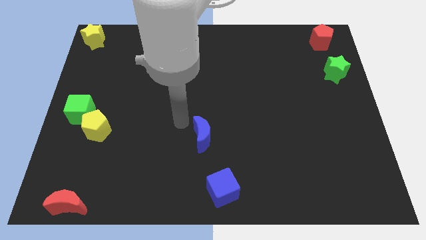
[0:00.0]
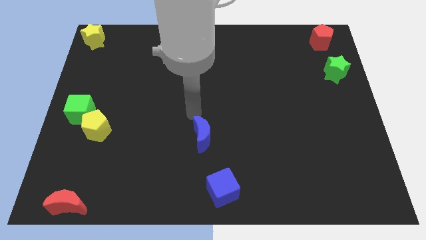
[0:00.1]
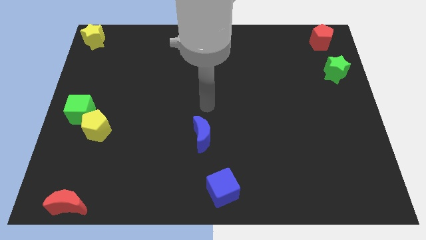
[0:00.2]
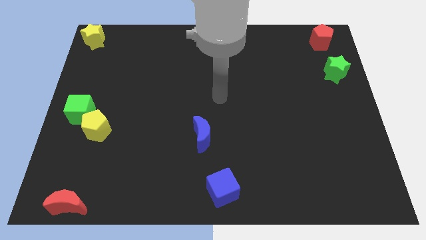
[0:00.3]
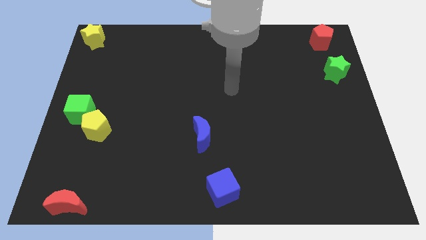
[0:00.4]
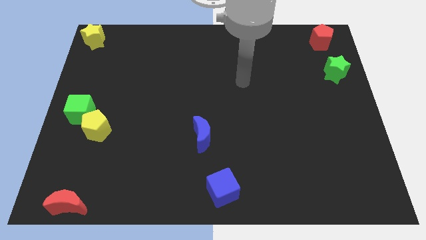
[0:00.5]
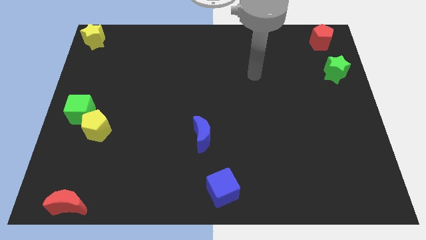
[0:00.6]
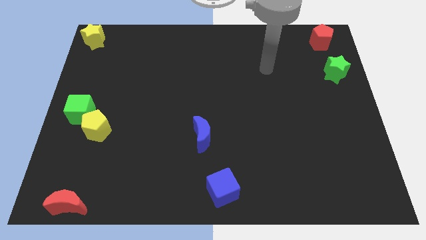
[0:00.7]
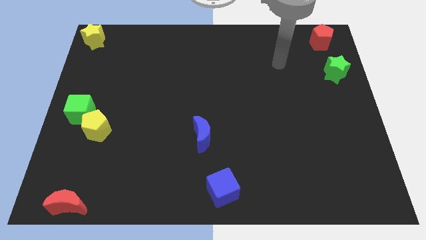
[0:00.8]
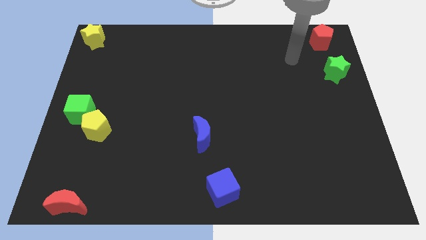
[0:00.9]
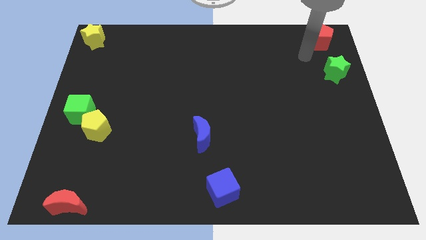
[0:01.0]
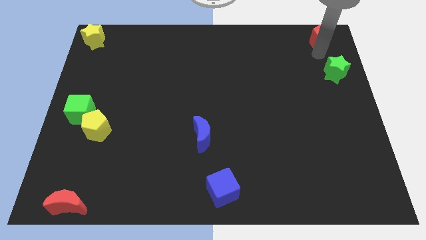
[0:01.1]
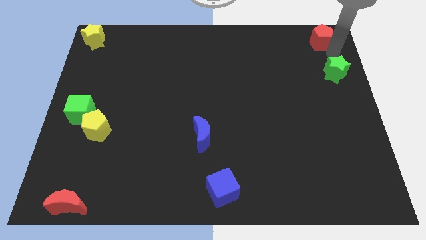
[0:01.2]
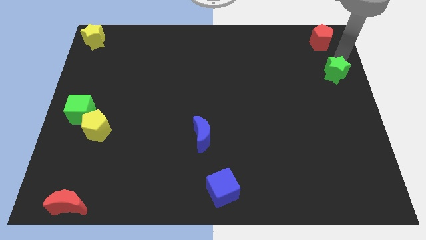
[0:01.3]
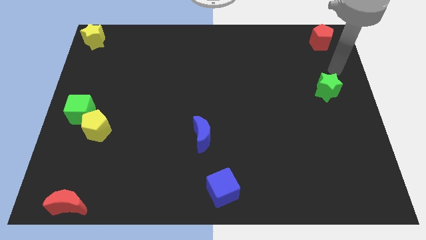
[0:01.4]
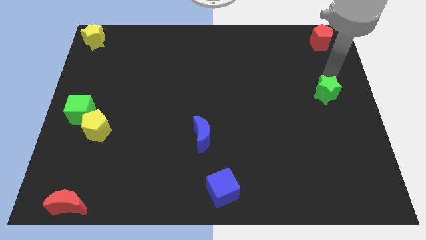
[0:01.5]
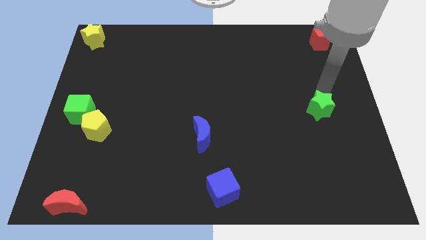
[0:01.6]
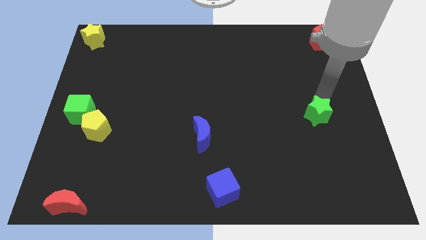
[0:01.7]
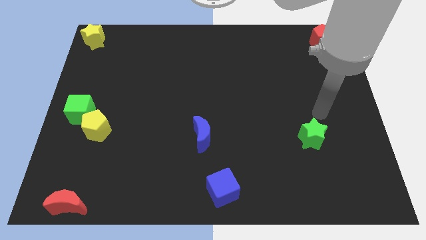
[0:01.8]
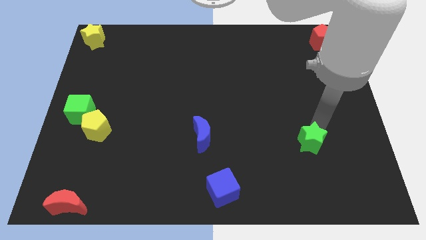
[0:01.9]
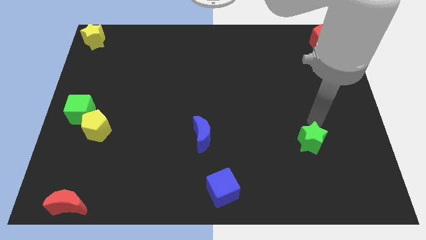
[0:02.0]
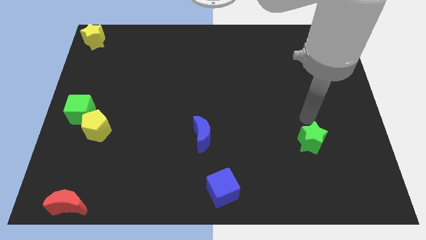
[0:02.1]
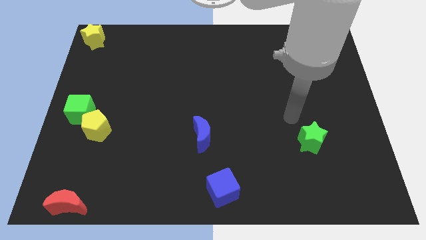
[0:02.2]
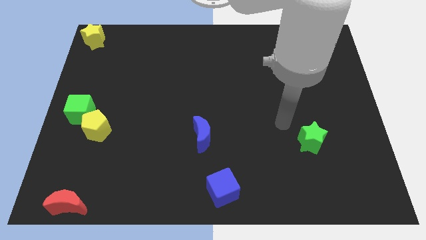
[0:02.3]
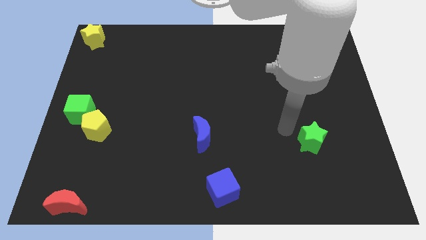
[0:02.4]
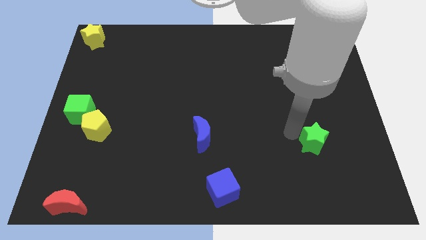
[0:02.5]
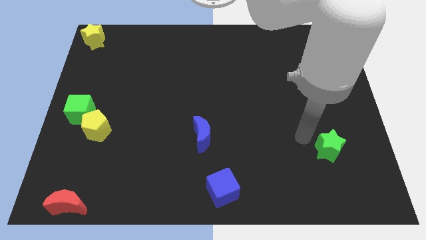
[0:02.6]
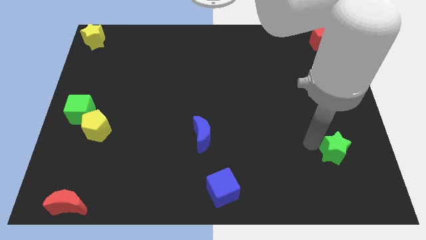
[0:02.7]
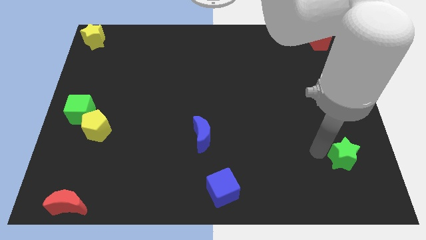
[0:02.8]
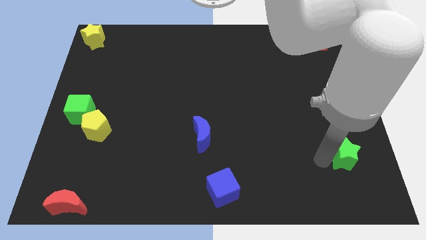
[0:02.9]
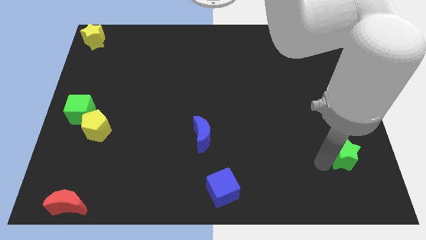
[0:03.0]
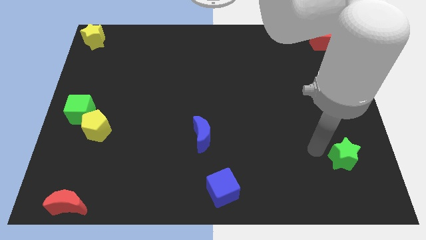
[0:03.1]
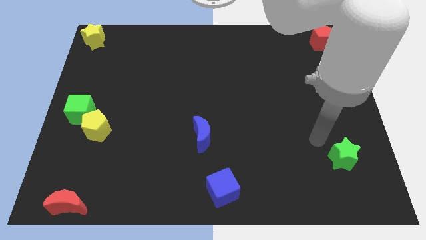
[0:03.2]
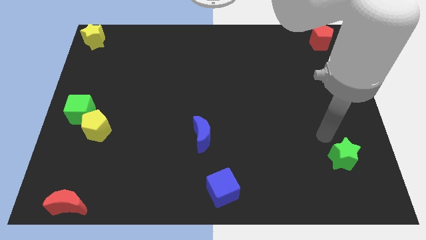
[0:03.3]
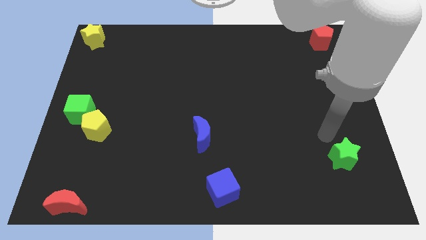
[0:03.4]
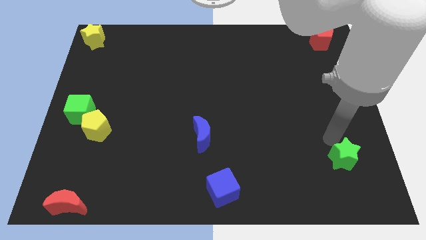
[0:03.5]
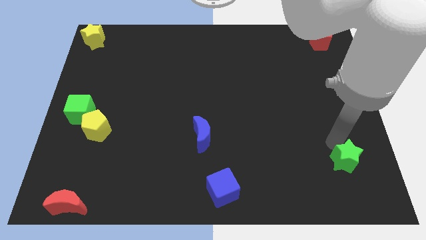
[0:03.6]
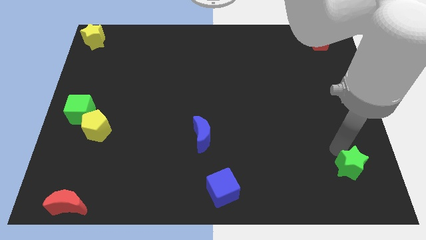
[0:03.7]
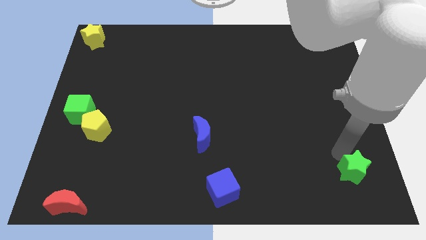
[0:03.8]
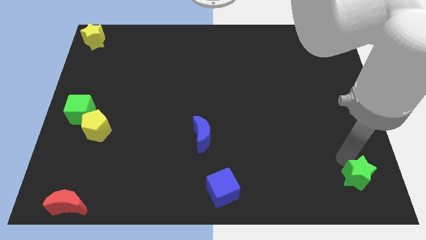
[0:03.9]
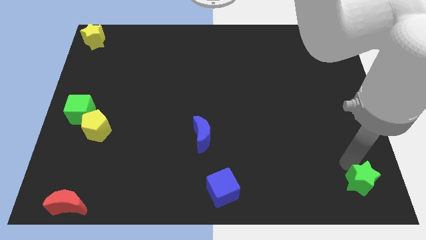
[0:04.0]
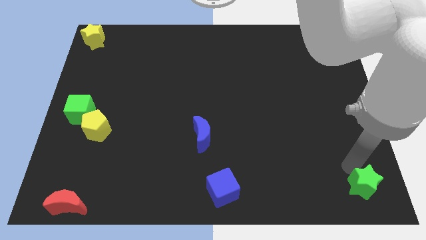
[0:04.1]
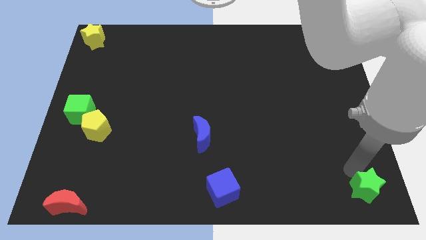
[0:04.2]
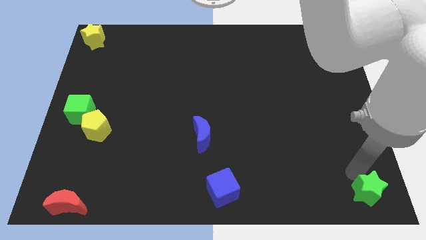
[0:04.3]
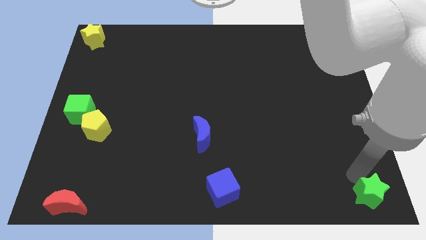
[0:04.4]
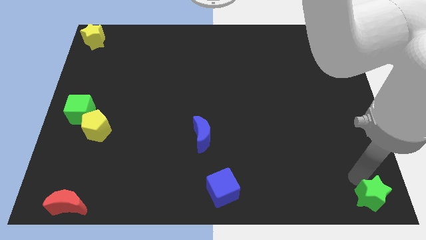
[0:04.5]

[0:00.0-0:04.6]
move the green star to the bottom right corner

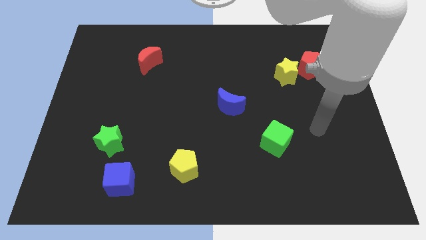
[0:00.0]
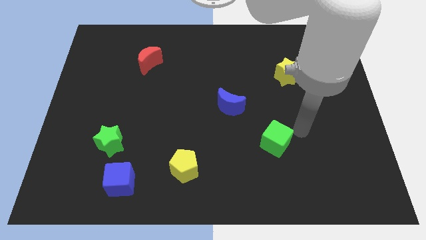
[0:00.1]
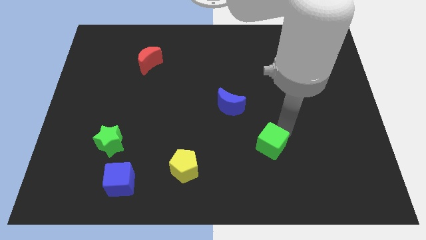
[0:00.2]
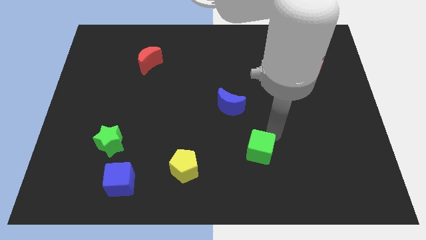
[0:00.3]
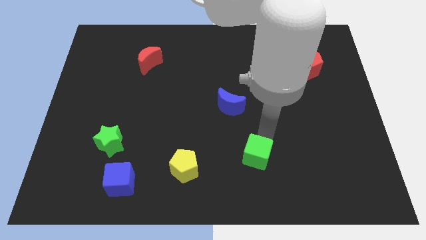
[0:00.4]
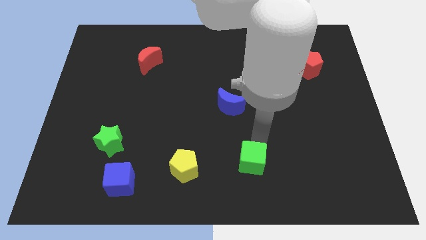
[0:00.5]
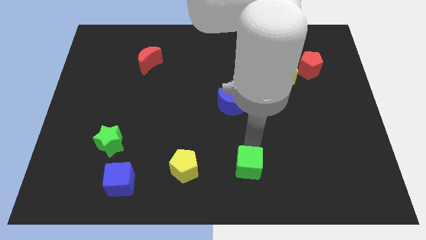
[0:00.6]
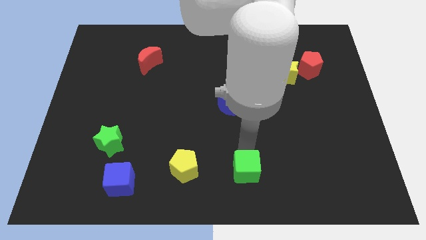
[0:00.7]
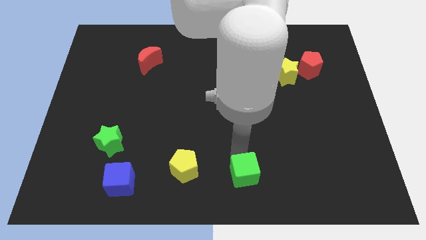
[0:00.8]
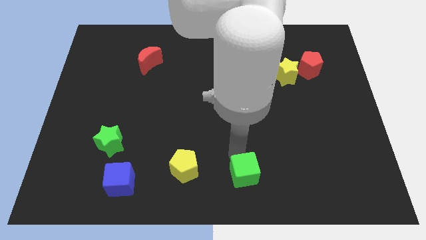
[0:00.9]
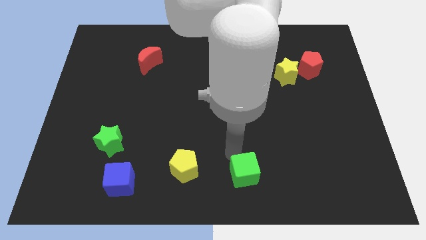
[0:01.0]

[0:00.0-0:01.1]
place green cube to the right of yellow pentagon

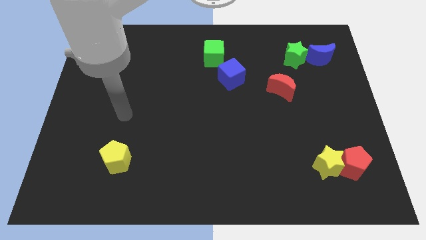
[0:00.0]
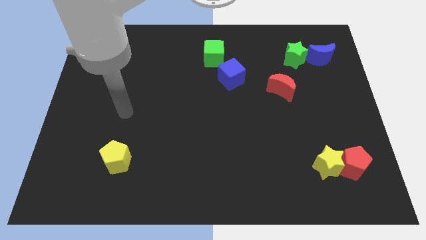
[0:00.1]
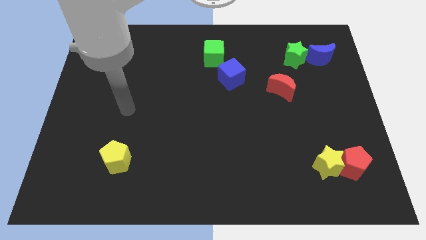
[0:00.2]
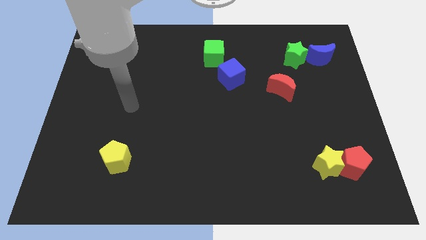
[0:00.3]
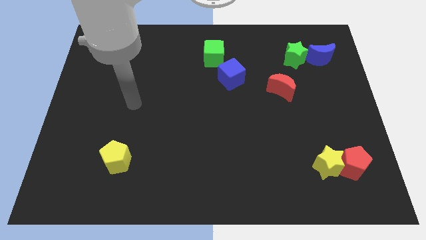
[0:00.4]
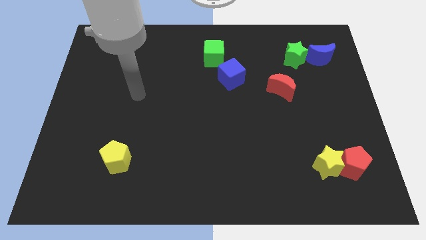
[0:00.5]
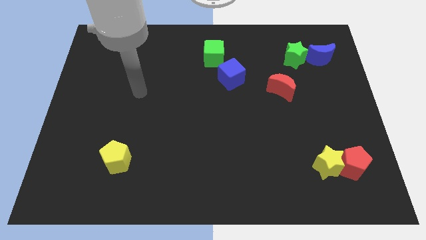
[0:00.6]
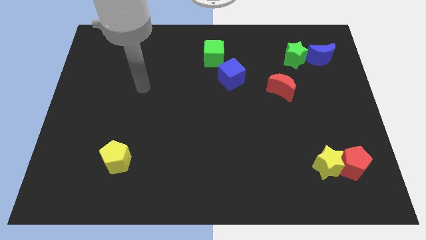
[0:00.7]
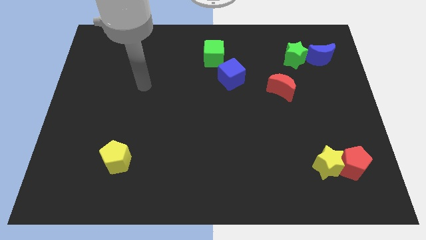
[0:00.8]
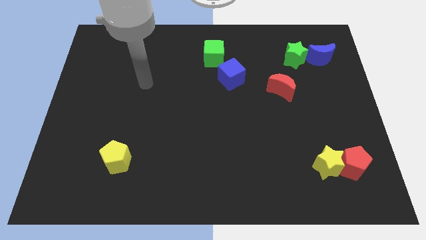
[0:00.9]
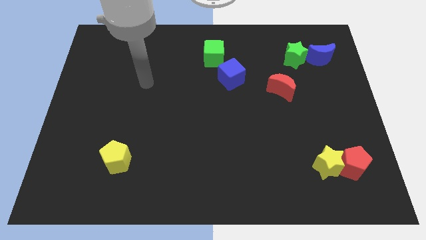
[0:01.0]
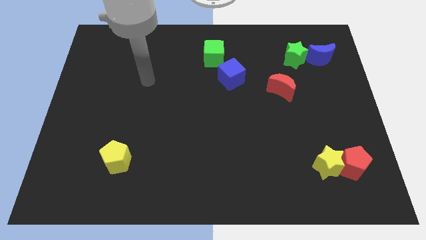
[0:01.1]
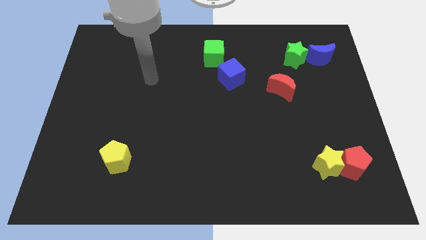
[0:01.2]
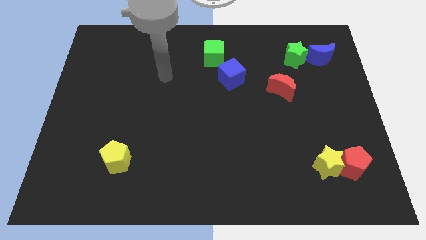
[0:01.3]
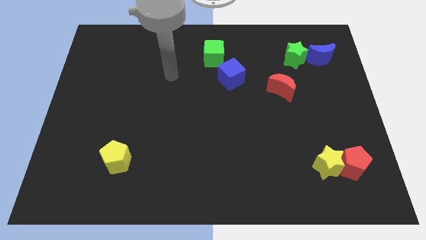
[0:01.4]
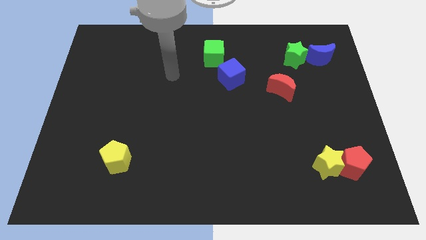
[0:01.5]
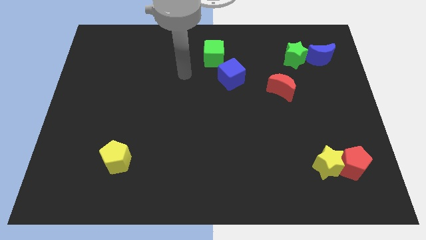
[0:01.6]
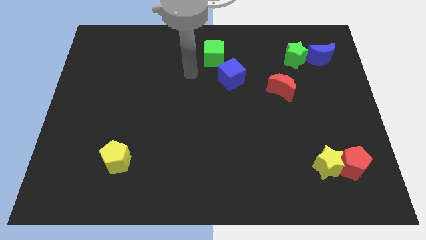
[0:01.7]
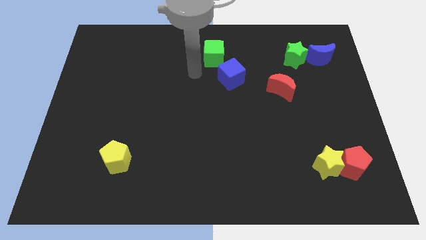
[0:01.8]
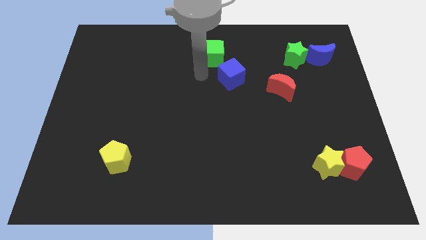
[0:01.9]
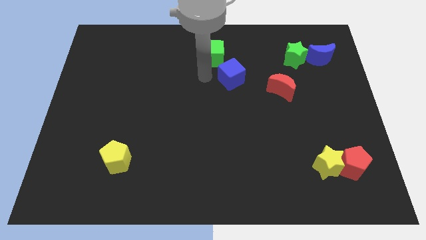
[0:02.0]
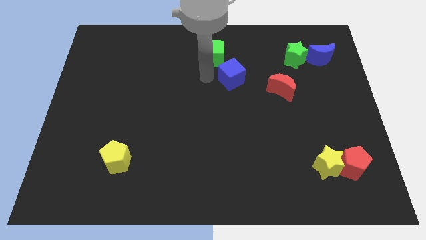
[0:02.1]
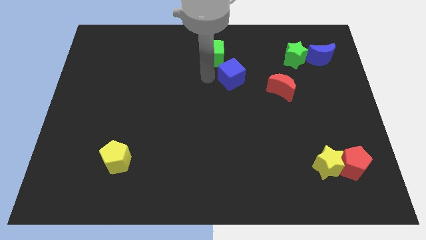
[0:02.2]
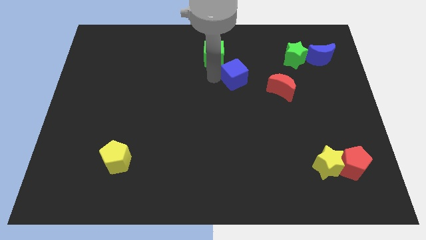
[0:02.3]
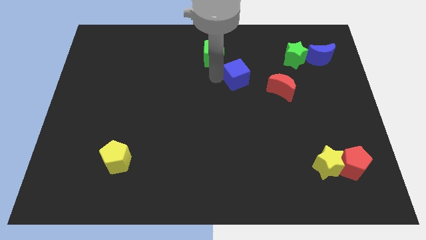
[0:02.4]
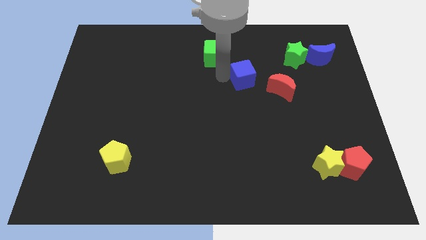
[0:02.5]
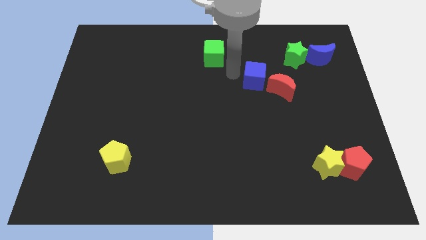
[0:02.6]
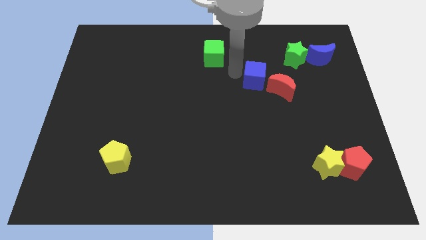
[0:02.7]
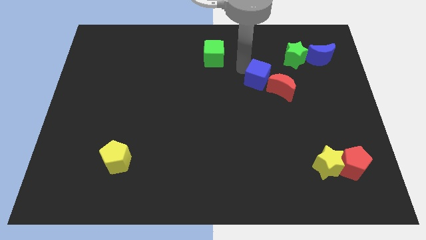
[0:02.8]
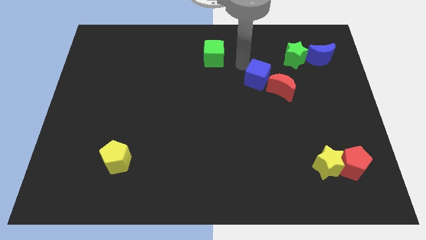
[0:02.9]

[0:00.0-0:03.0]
push the blue cube to the top left of the red crescent

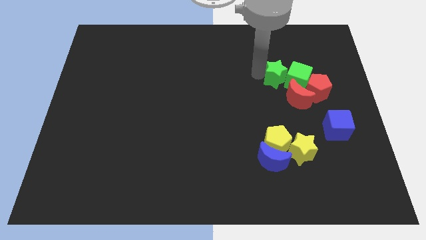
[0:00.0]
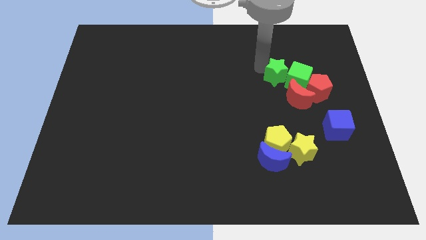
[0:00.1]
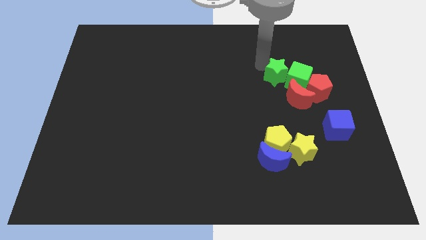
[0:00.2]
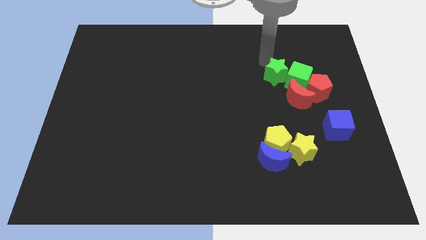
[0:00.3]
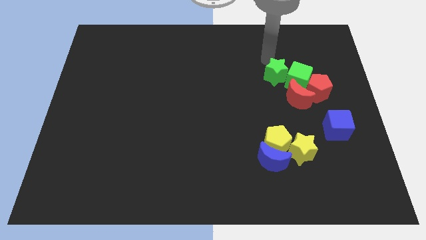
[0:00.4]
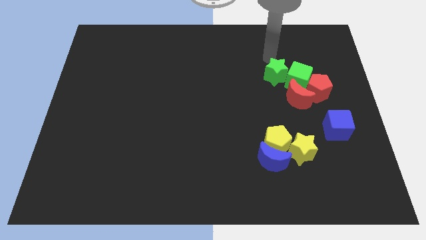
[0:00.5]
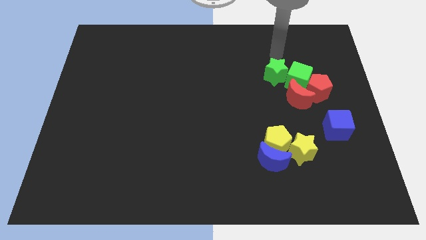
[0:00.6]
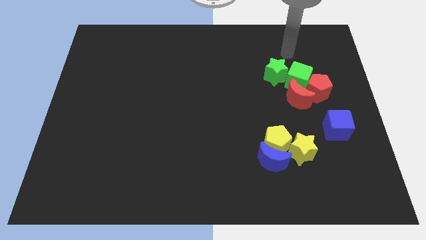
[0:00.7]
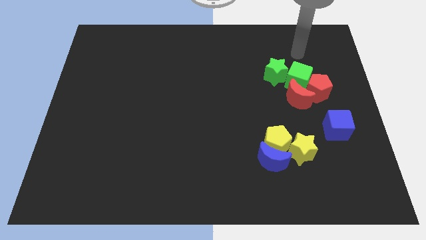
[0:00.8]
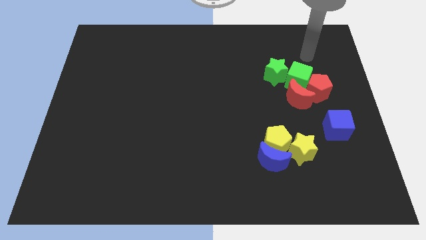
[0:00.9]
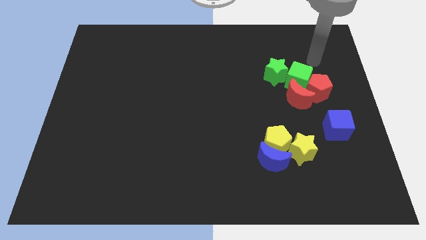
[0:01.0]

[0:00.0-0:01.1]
move your arm away from the green star
